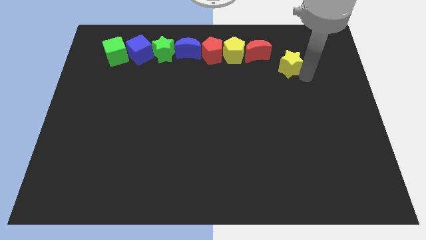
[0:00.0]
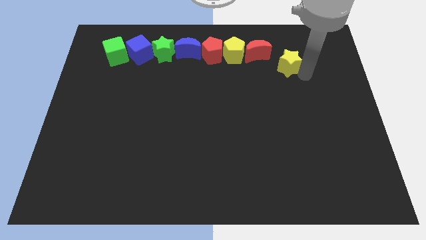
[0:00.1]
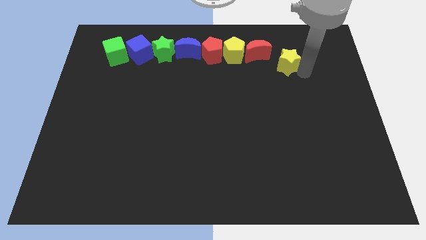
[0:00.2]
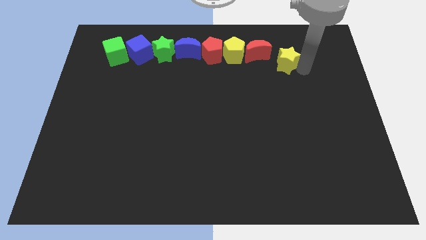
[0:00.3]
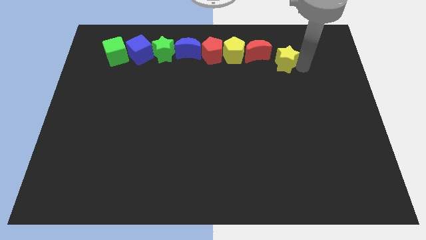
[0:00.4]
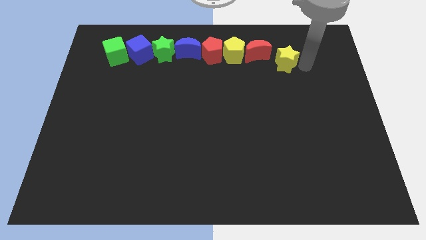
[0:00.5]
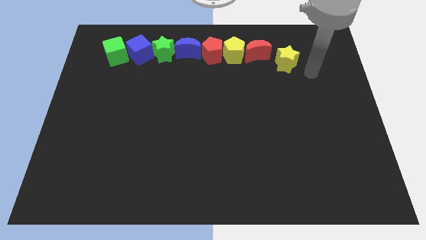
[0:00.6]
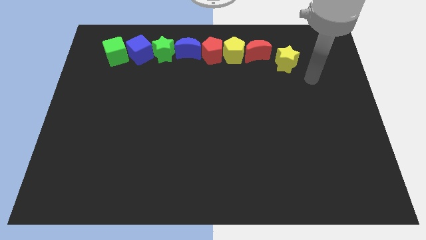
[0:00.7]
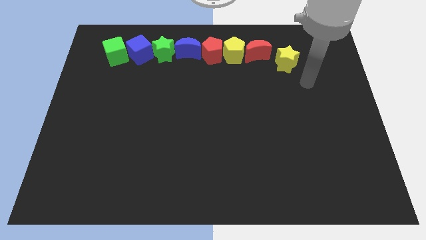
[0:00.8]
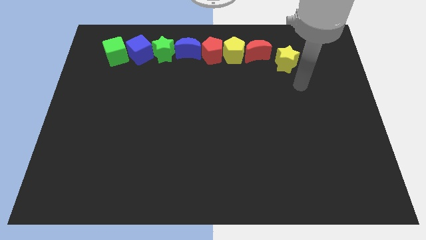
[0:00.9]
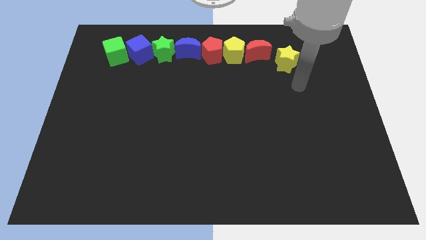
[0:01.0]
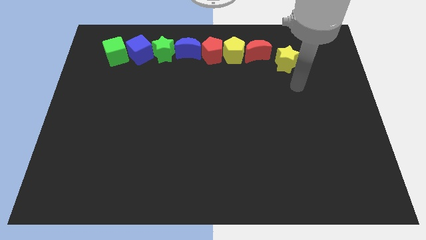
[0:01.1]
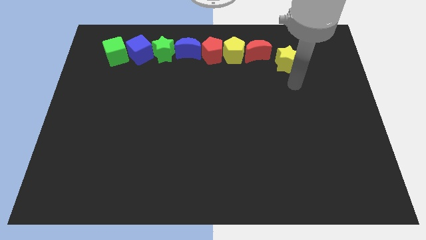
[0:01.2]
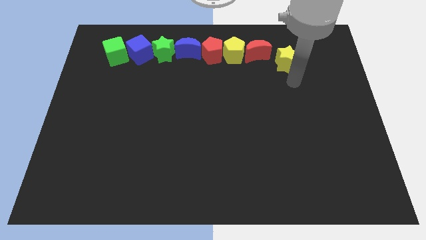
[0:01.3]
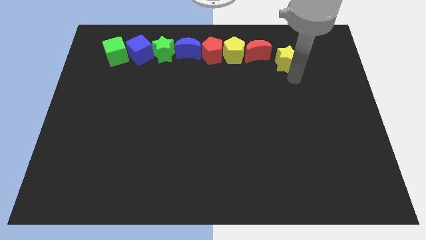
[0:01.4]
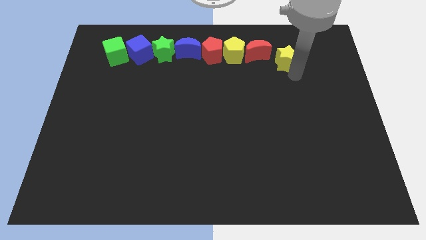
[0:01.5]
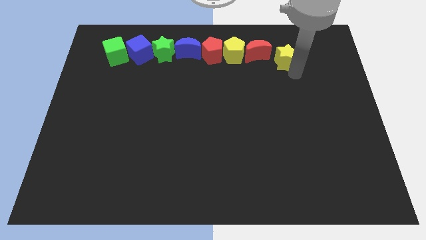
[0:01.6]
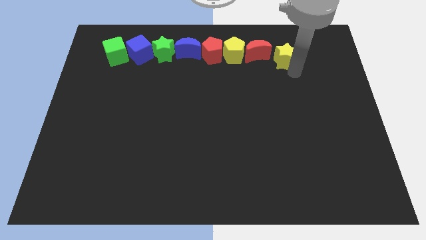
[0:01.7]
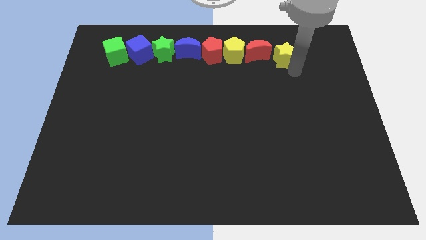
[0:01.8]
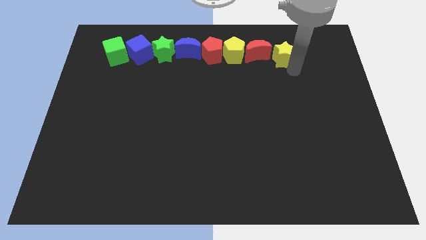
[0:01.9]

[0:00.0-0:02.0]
place yellow star to the right of red crescent

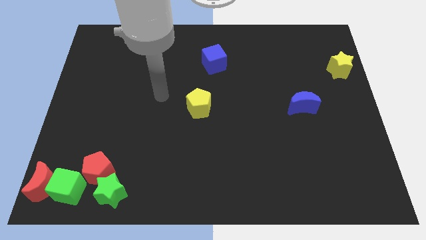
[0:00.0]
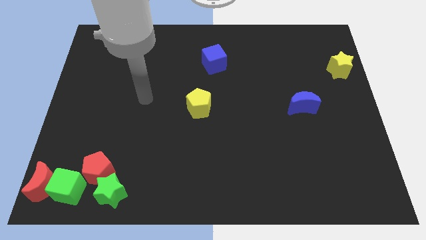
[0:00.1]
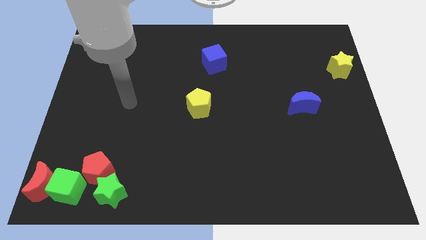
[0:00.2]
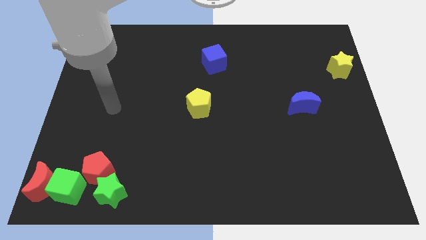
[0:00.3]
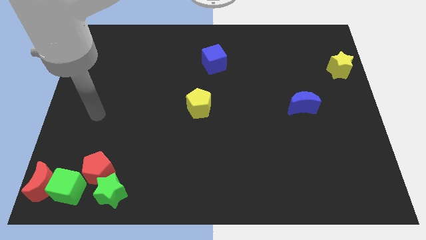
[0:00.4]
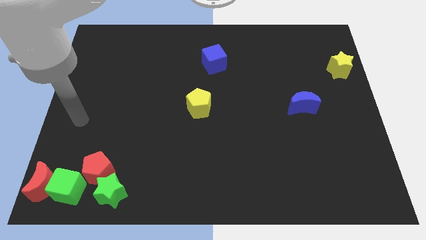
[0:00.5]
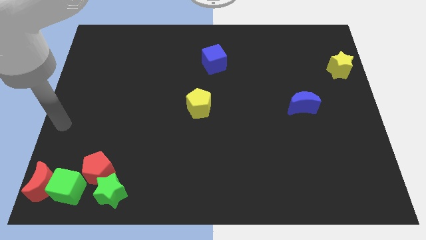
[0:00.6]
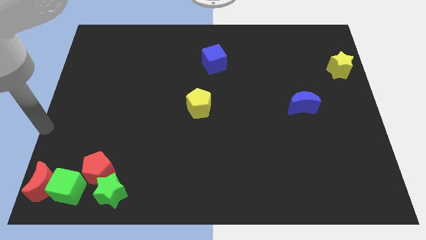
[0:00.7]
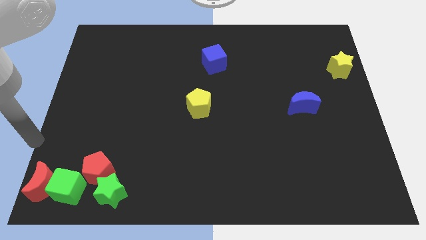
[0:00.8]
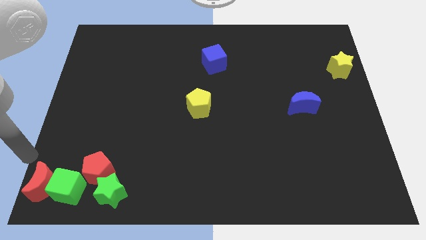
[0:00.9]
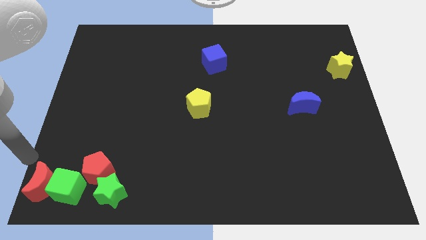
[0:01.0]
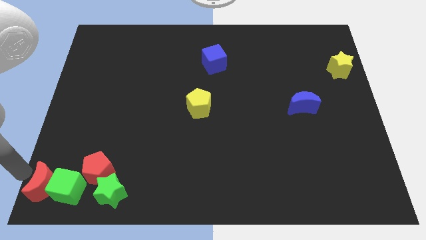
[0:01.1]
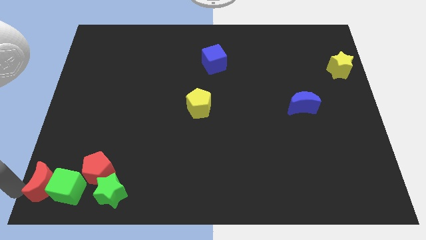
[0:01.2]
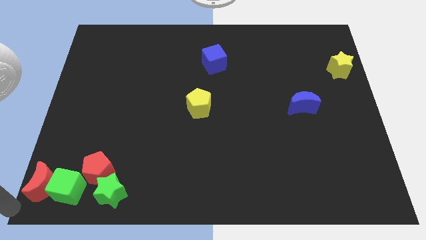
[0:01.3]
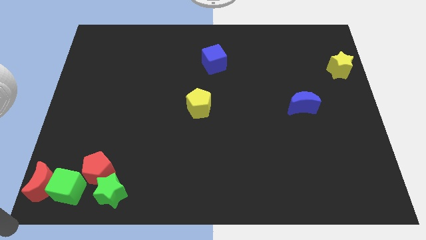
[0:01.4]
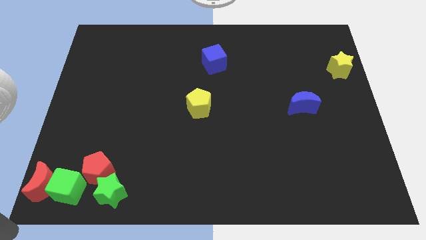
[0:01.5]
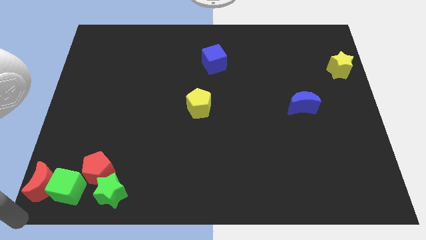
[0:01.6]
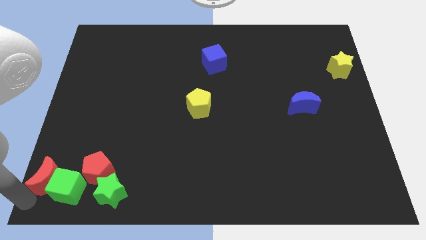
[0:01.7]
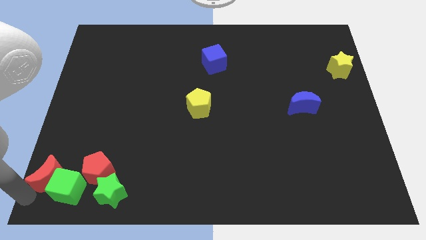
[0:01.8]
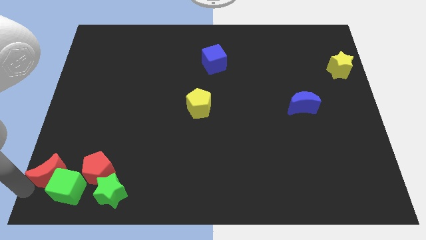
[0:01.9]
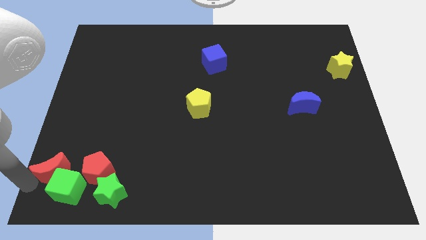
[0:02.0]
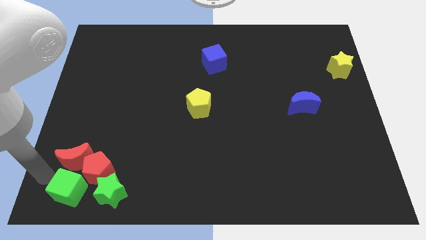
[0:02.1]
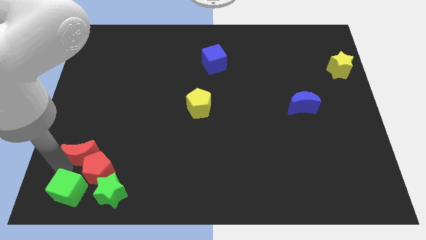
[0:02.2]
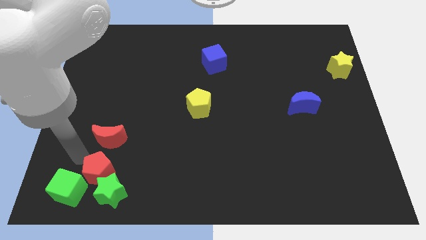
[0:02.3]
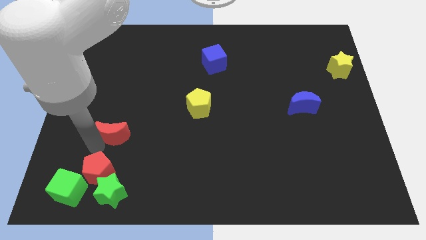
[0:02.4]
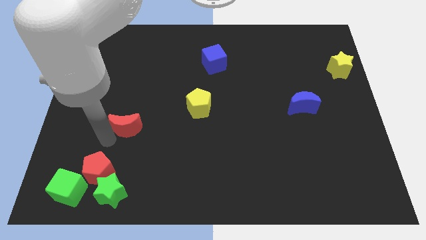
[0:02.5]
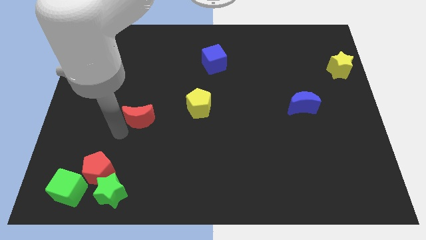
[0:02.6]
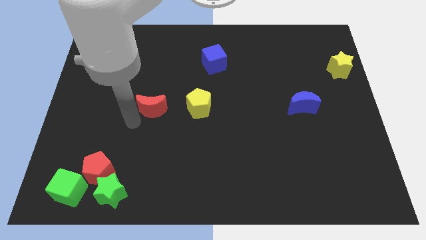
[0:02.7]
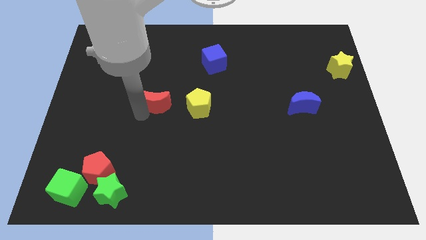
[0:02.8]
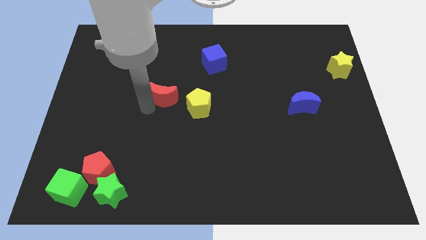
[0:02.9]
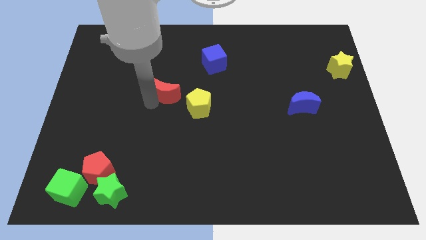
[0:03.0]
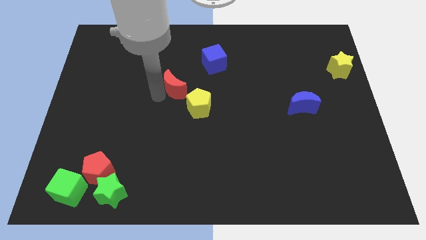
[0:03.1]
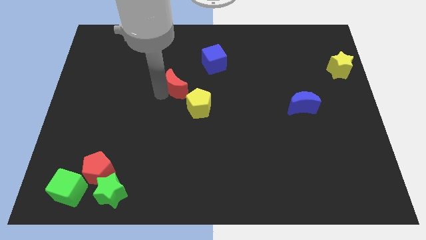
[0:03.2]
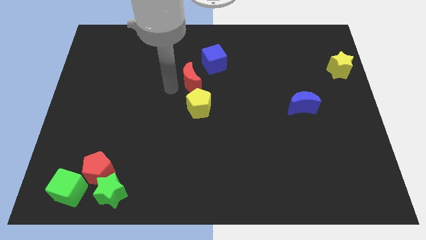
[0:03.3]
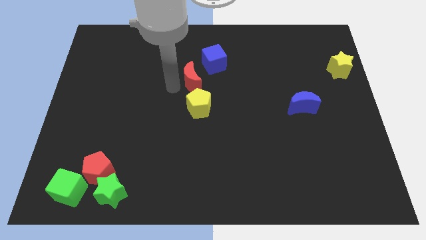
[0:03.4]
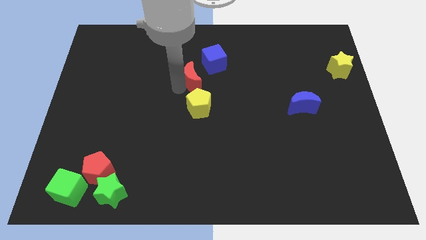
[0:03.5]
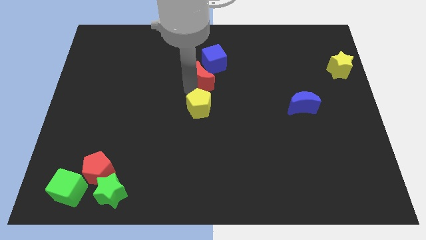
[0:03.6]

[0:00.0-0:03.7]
separate the red moon from the group of blocks

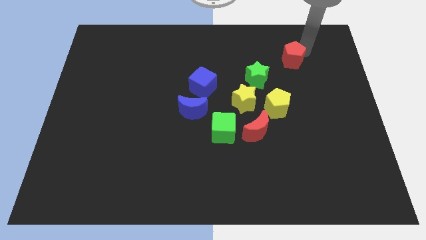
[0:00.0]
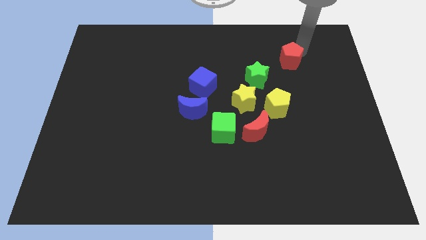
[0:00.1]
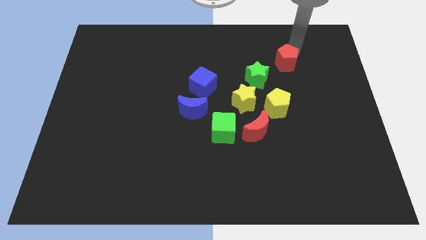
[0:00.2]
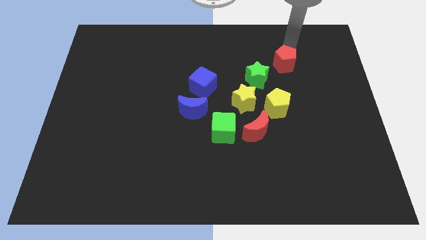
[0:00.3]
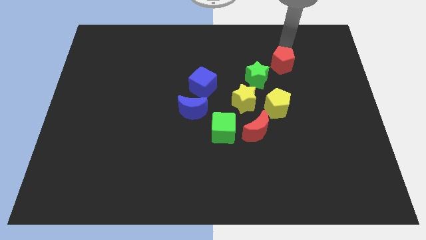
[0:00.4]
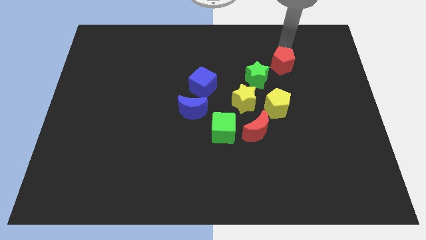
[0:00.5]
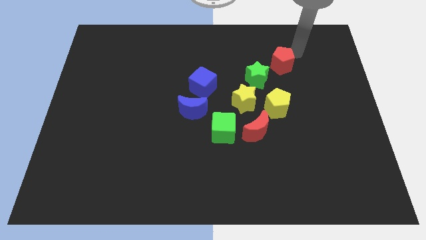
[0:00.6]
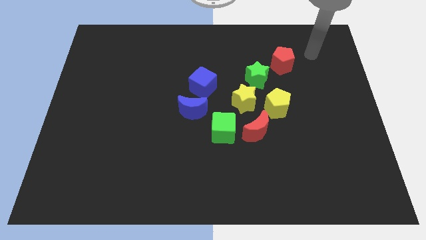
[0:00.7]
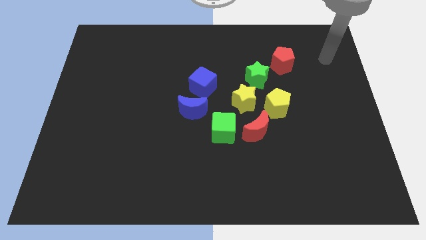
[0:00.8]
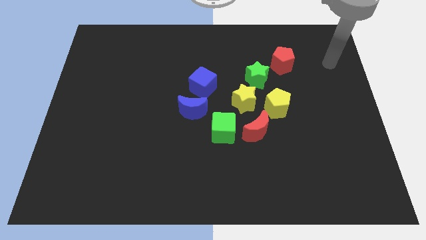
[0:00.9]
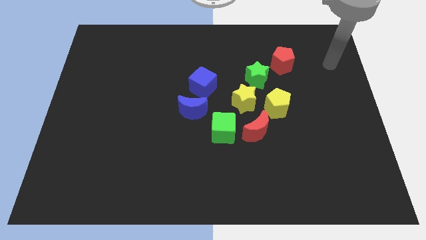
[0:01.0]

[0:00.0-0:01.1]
slightly push the red pentagon above the green star

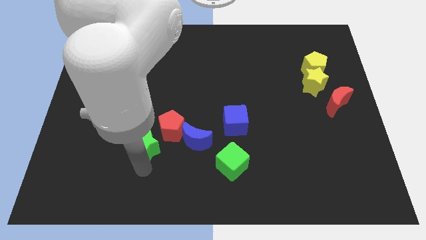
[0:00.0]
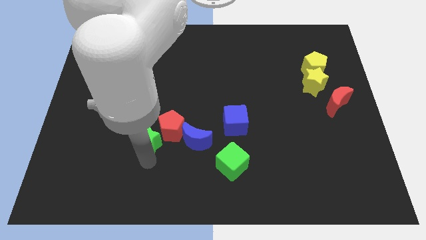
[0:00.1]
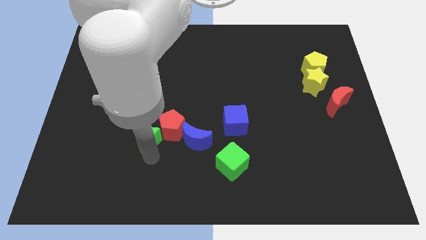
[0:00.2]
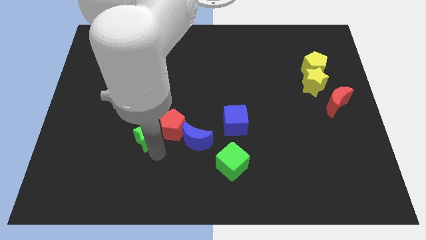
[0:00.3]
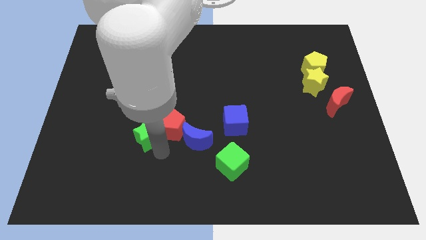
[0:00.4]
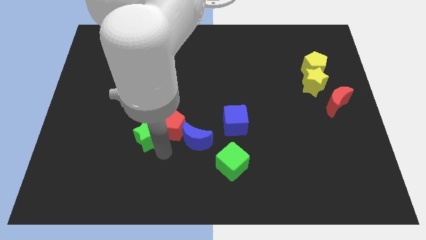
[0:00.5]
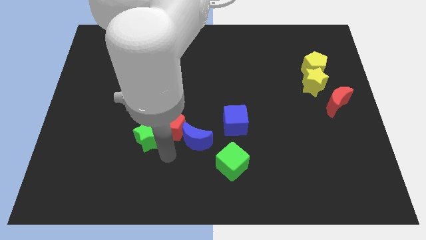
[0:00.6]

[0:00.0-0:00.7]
push the green star slightly into the red pentagon

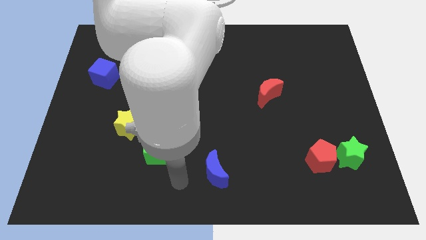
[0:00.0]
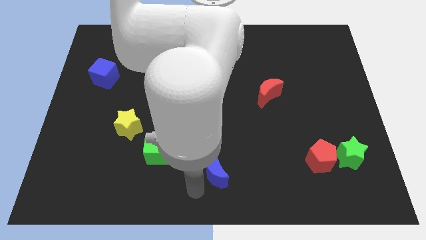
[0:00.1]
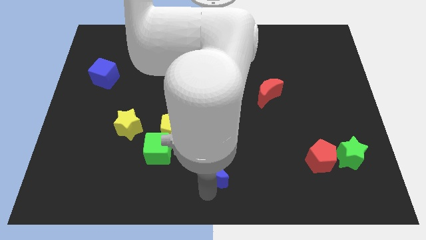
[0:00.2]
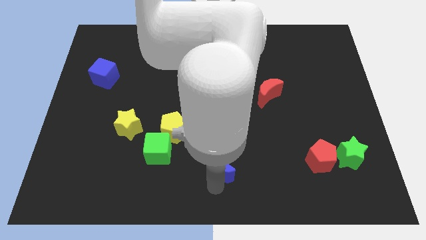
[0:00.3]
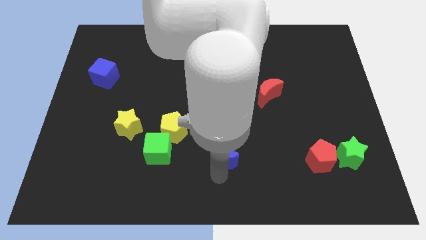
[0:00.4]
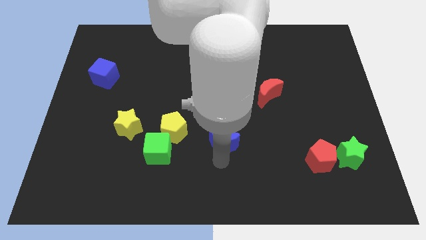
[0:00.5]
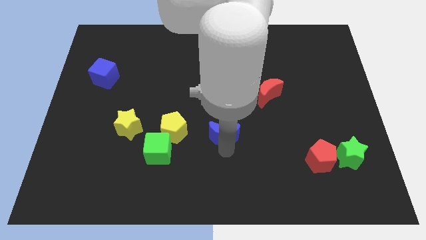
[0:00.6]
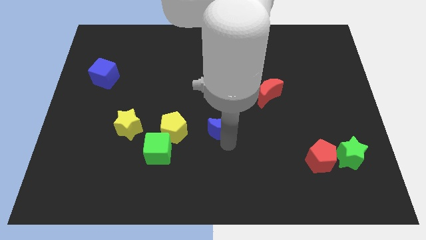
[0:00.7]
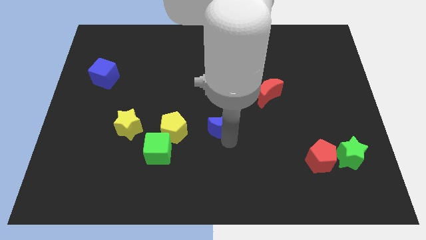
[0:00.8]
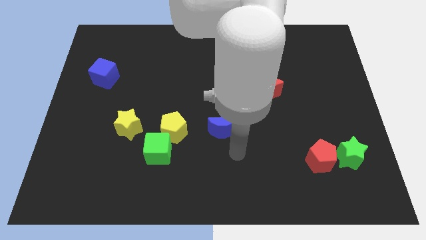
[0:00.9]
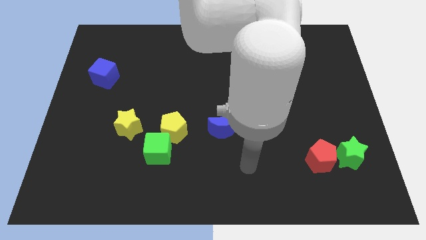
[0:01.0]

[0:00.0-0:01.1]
move the blue crescent to the right of the yellow pentagon

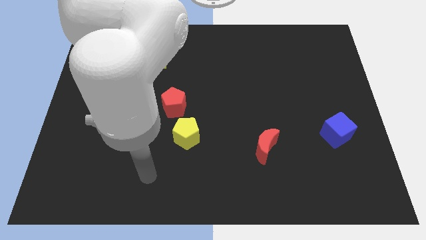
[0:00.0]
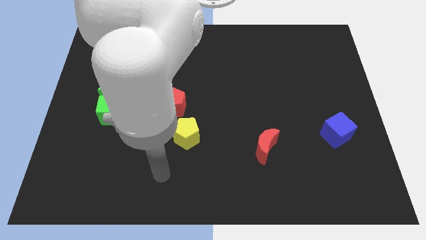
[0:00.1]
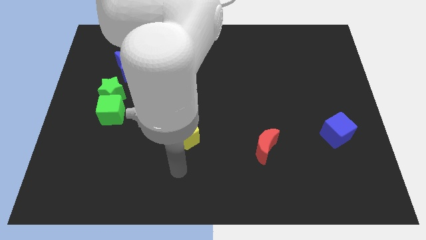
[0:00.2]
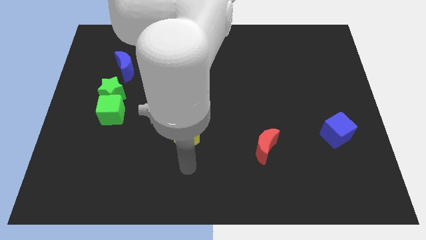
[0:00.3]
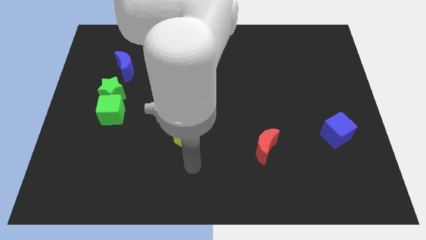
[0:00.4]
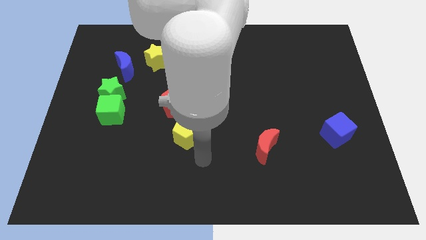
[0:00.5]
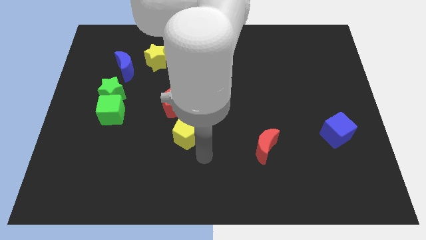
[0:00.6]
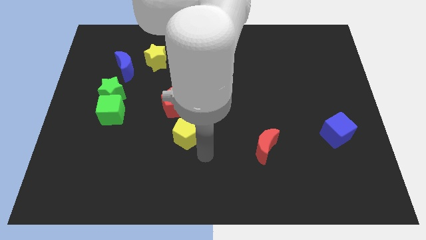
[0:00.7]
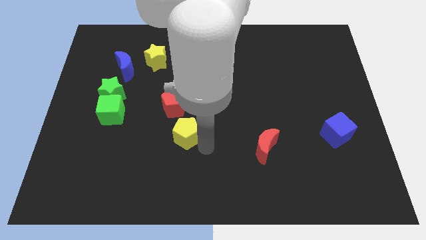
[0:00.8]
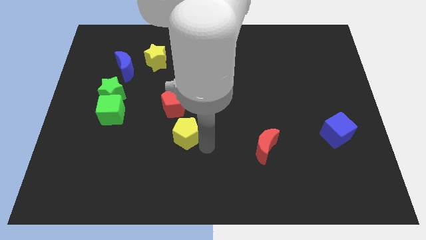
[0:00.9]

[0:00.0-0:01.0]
place the arm near the yellow pentagon
